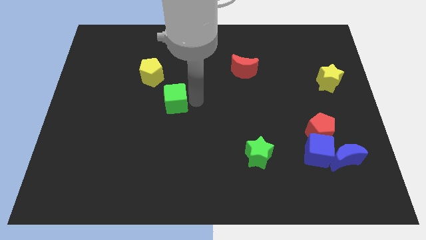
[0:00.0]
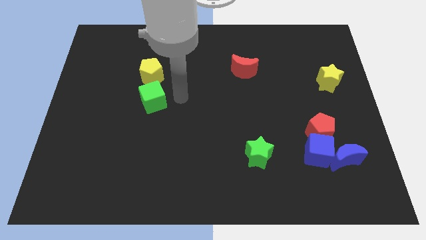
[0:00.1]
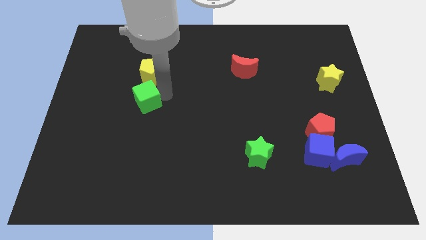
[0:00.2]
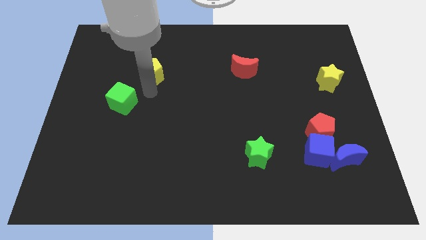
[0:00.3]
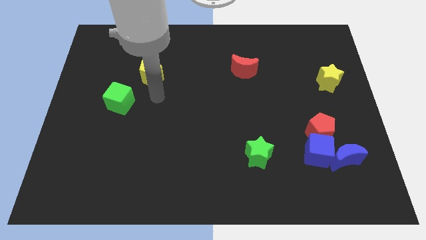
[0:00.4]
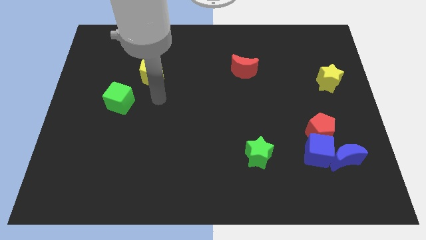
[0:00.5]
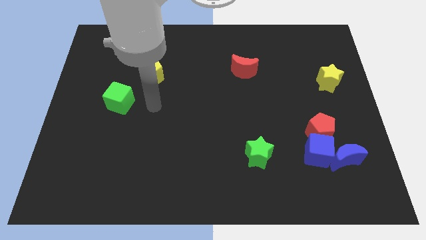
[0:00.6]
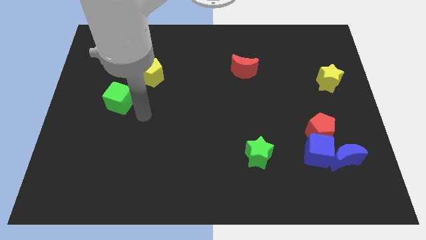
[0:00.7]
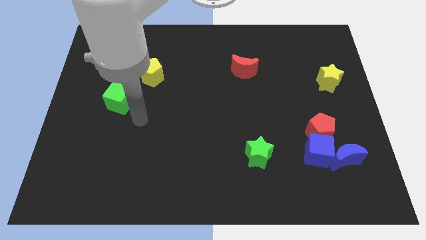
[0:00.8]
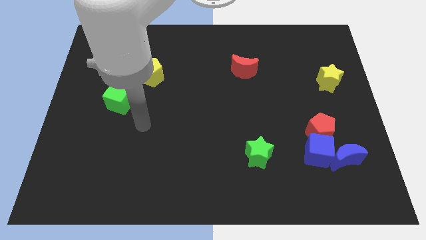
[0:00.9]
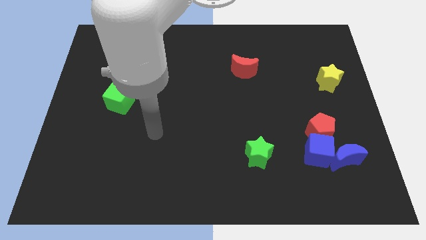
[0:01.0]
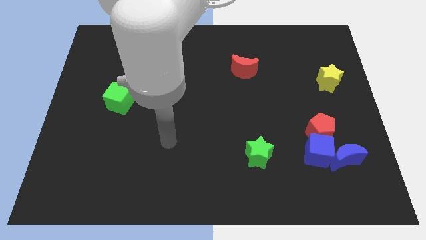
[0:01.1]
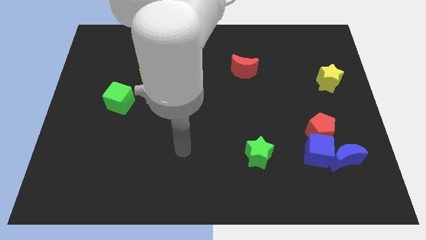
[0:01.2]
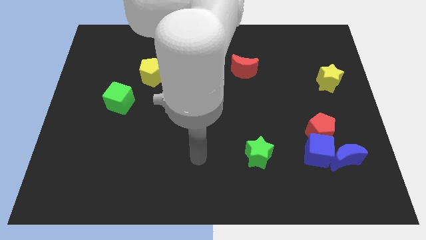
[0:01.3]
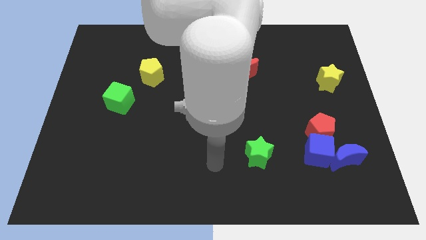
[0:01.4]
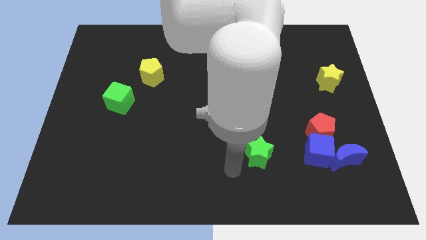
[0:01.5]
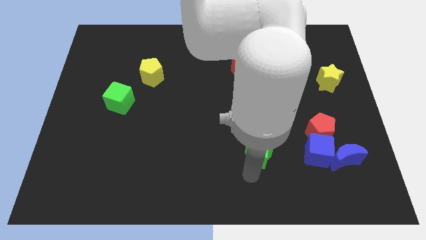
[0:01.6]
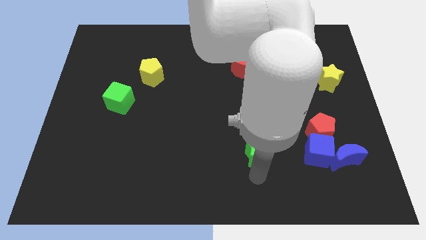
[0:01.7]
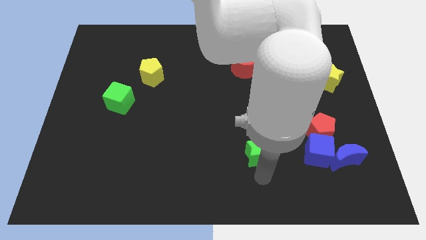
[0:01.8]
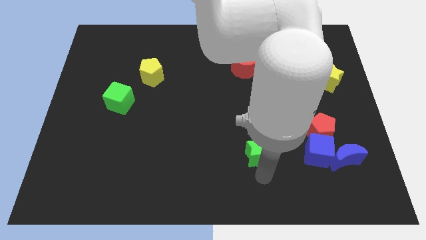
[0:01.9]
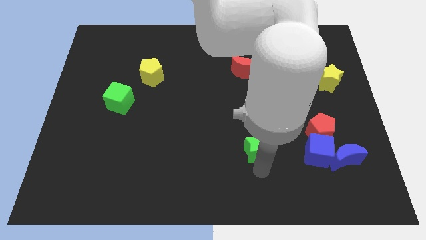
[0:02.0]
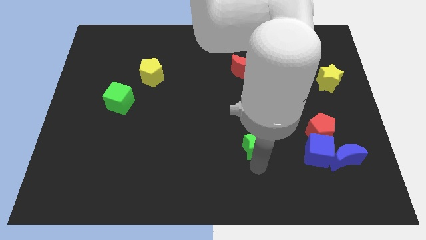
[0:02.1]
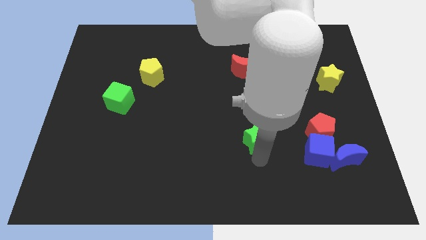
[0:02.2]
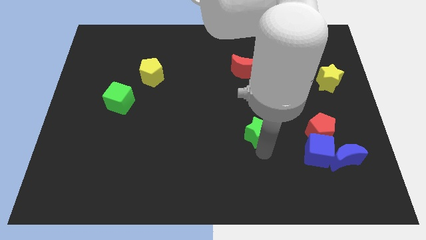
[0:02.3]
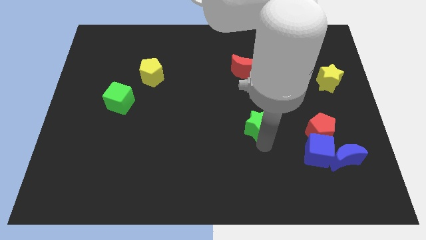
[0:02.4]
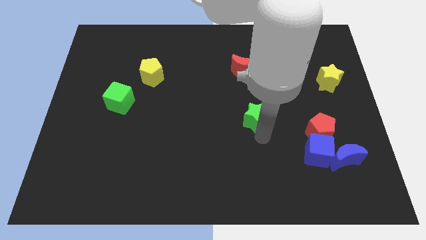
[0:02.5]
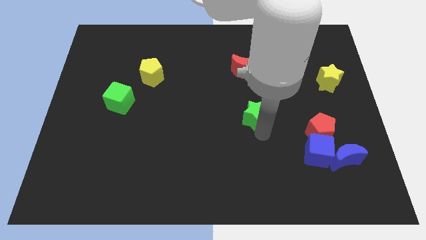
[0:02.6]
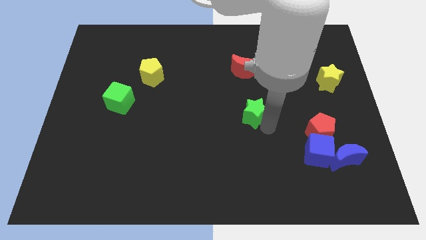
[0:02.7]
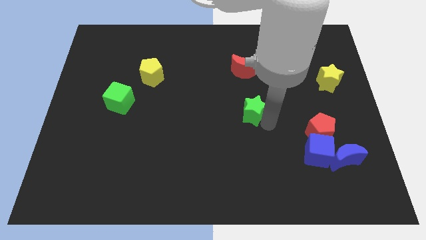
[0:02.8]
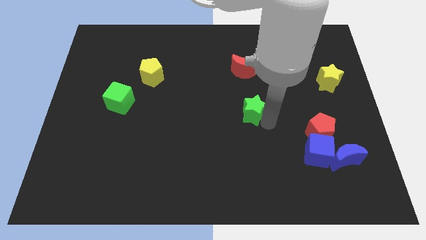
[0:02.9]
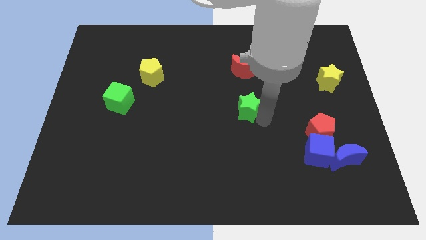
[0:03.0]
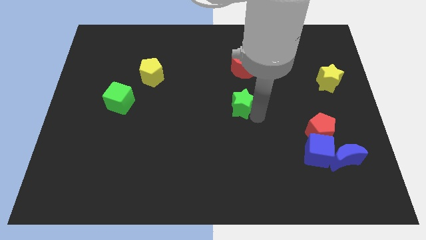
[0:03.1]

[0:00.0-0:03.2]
move the green star below the red moon

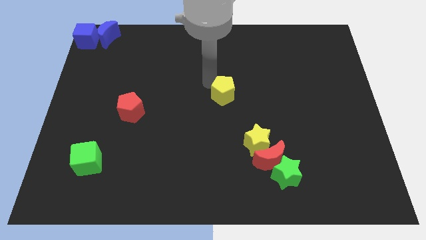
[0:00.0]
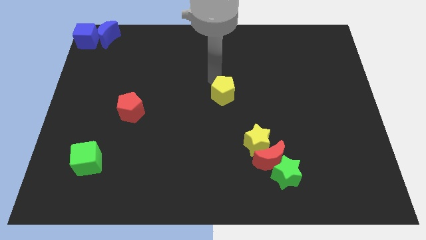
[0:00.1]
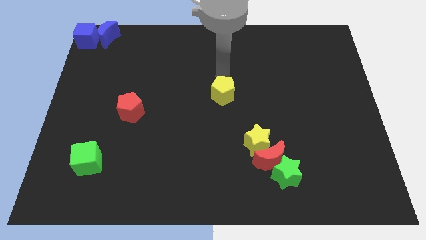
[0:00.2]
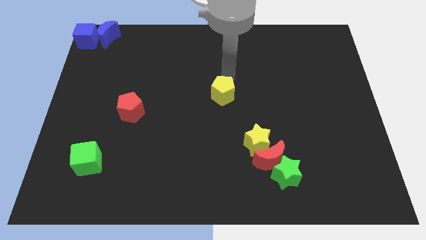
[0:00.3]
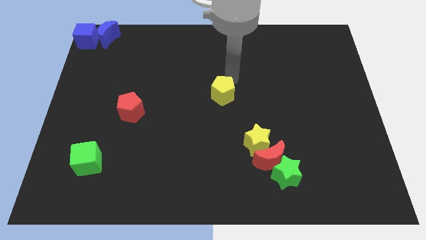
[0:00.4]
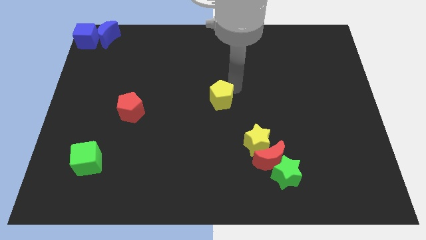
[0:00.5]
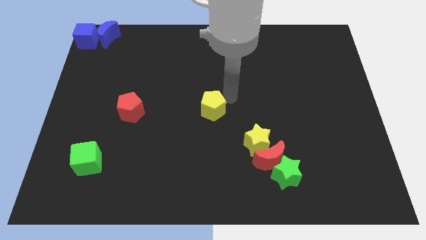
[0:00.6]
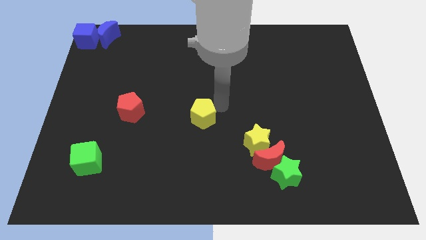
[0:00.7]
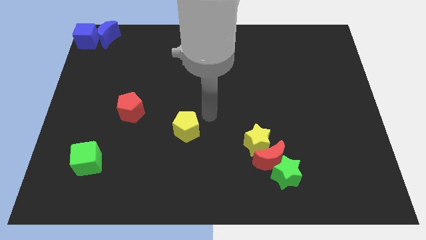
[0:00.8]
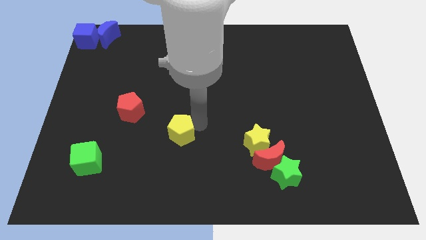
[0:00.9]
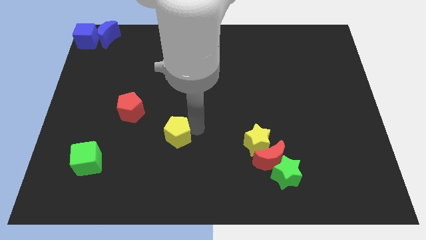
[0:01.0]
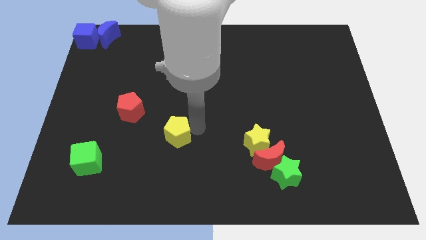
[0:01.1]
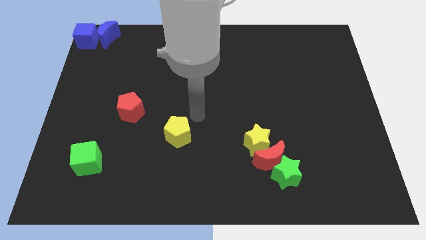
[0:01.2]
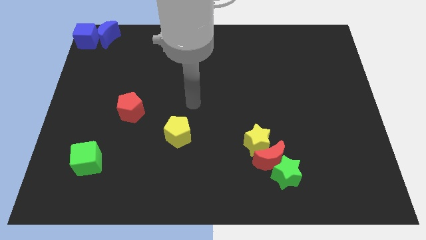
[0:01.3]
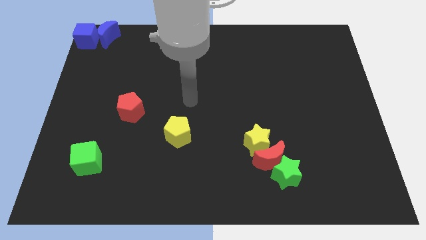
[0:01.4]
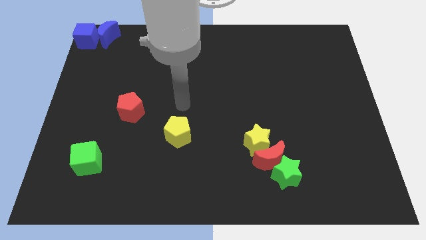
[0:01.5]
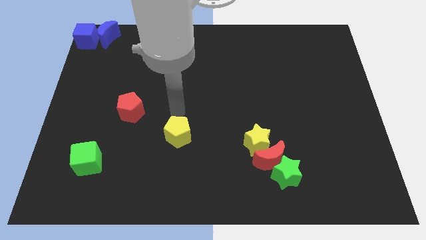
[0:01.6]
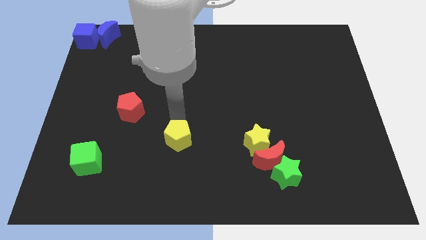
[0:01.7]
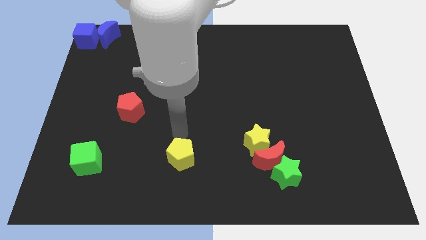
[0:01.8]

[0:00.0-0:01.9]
place the yellow pentagon in between the green cube and yellow star

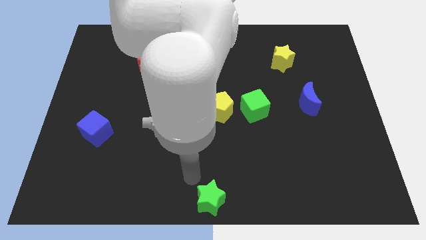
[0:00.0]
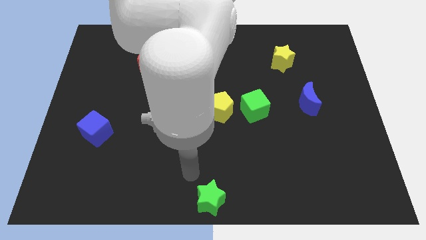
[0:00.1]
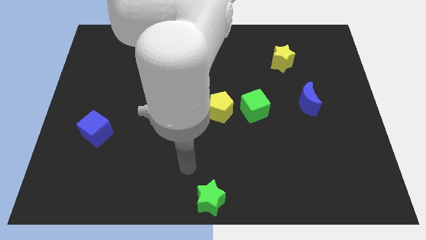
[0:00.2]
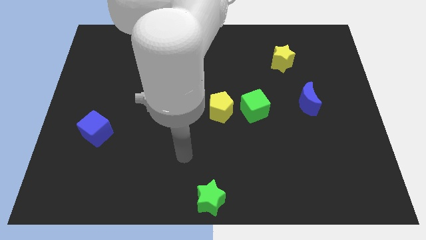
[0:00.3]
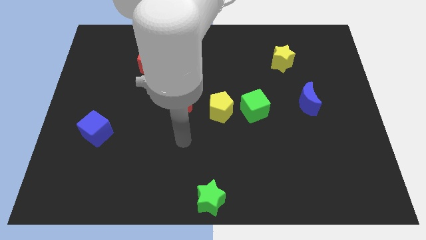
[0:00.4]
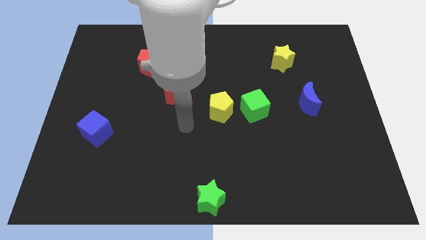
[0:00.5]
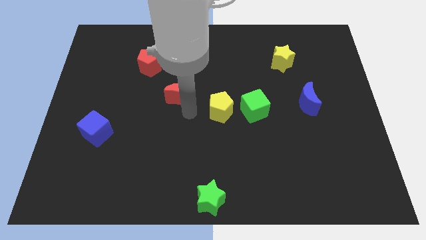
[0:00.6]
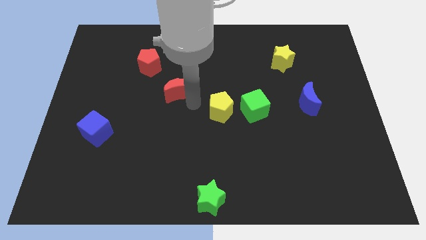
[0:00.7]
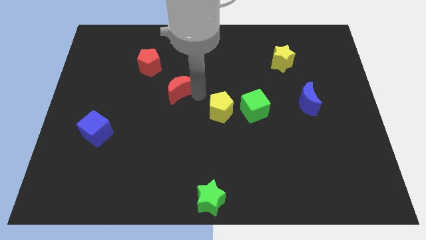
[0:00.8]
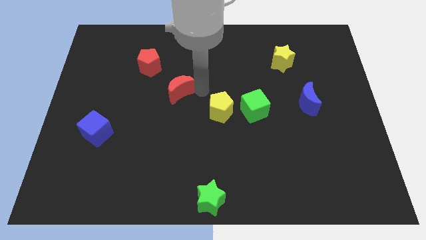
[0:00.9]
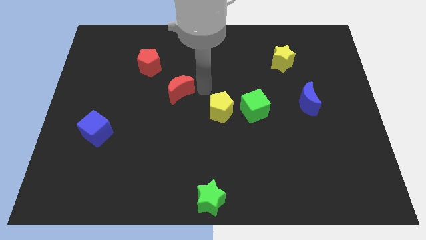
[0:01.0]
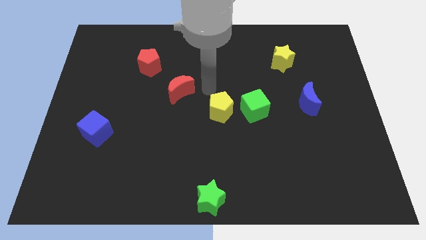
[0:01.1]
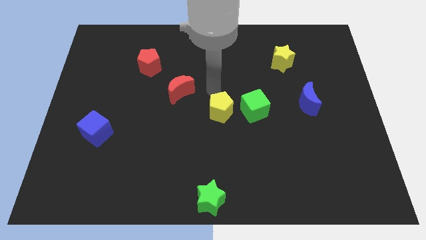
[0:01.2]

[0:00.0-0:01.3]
point your arm at the top of the yellow pentagon

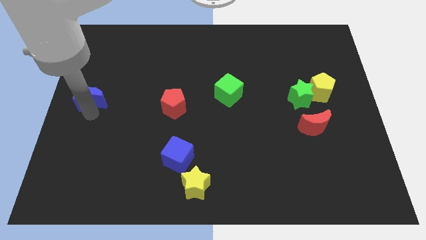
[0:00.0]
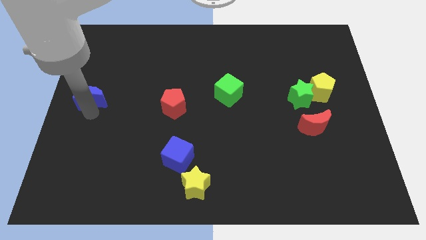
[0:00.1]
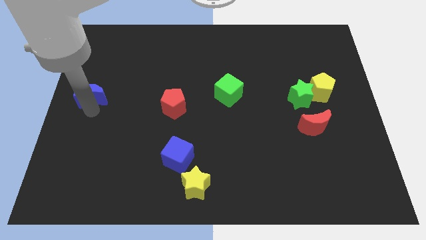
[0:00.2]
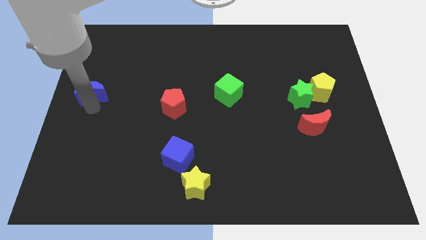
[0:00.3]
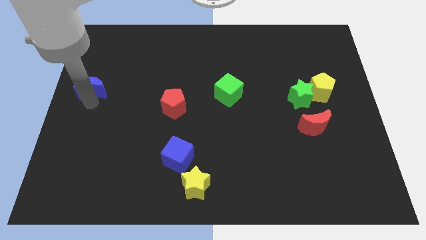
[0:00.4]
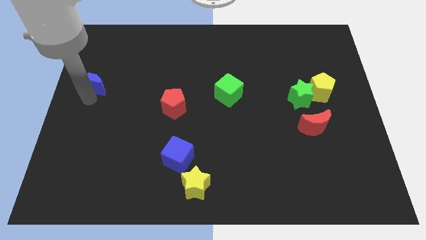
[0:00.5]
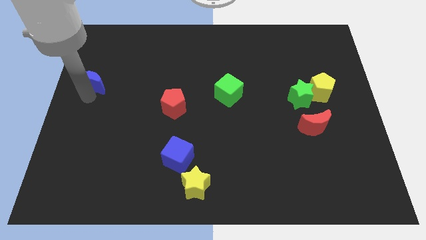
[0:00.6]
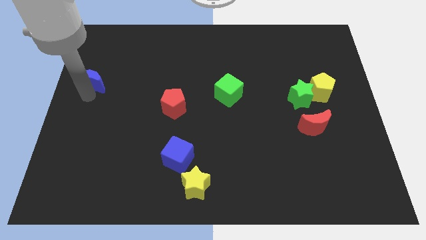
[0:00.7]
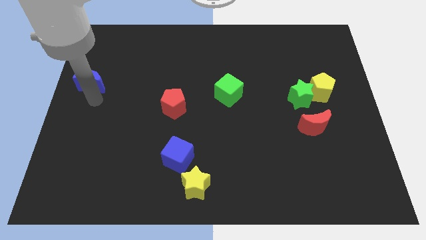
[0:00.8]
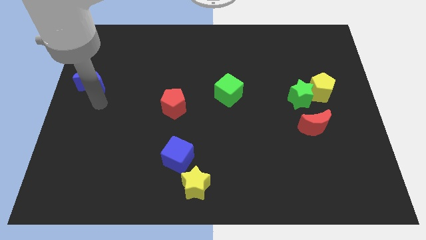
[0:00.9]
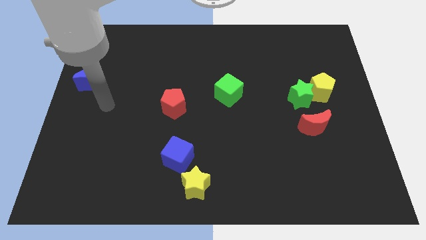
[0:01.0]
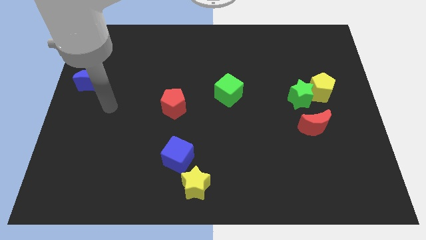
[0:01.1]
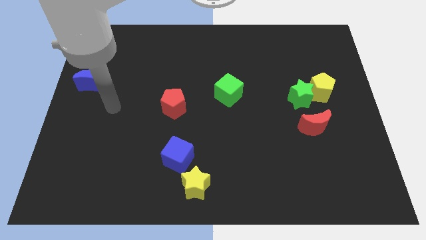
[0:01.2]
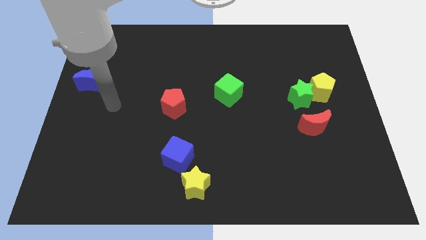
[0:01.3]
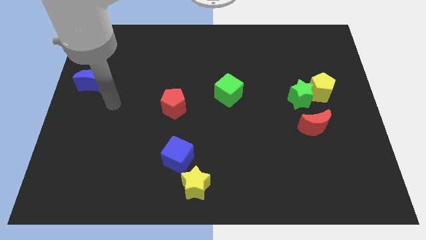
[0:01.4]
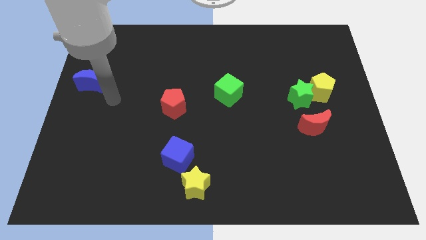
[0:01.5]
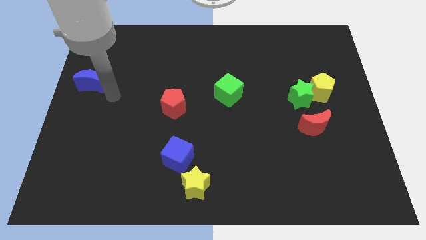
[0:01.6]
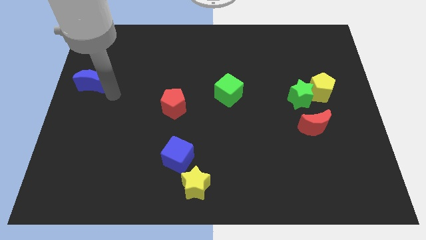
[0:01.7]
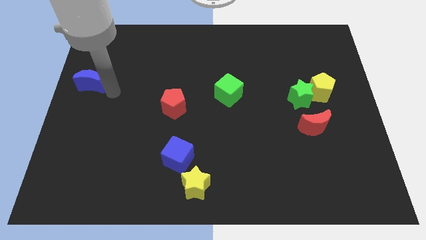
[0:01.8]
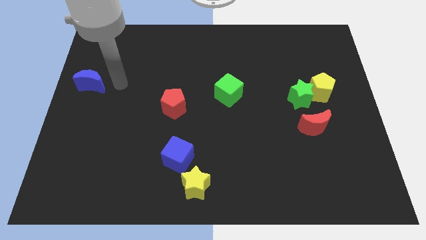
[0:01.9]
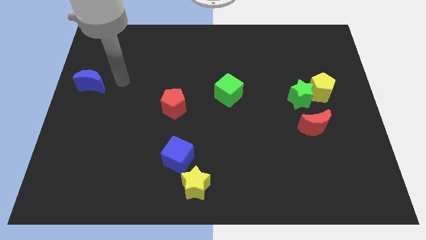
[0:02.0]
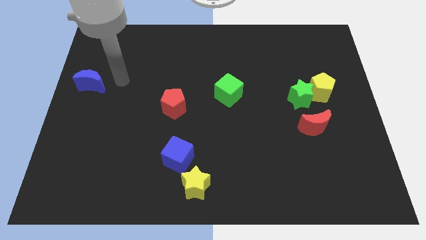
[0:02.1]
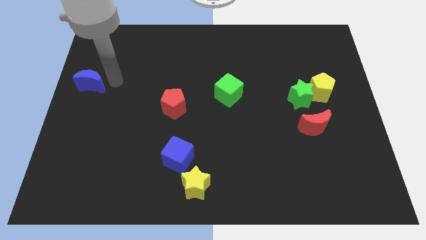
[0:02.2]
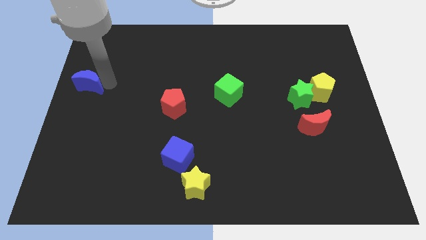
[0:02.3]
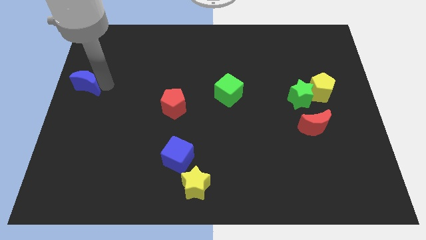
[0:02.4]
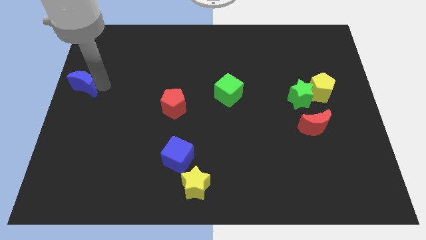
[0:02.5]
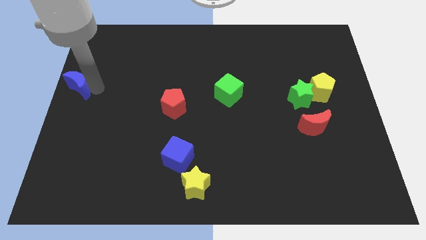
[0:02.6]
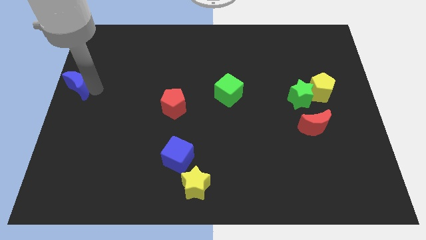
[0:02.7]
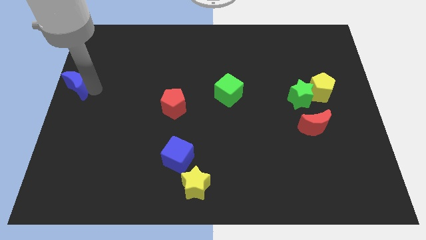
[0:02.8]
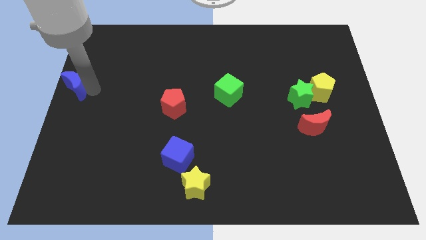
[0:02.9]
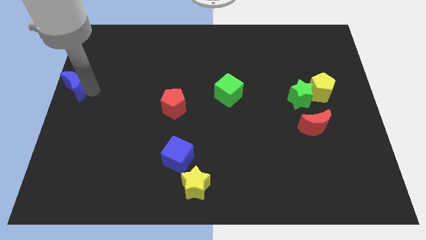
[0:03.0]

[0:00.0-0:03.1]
drag the blue crescent to left side of the board
